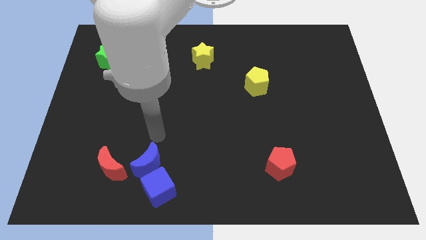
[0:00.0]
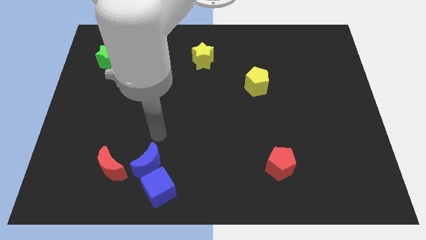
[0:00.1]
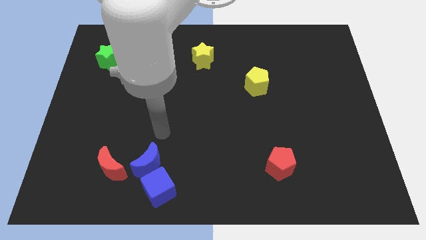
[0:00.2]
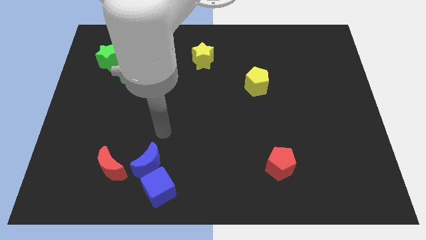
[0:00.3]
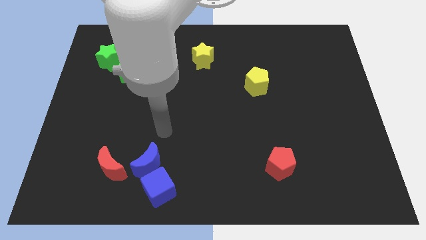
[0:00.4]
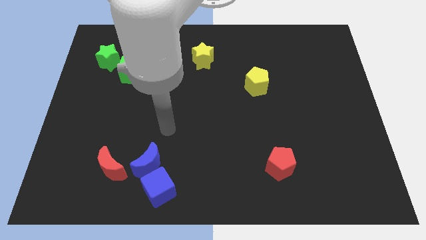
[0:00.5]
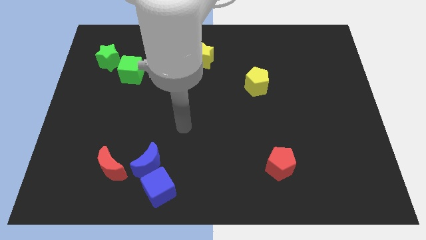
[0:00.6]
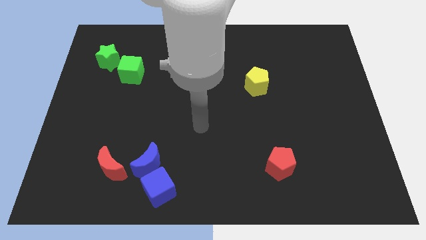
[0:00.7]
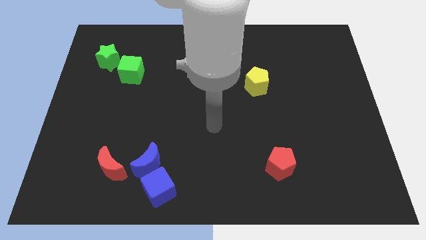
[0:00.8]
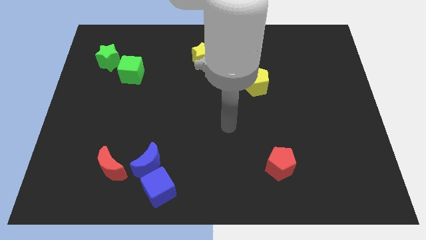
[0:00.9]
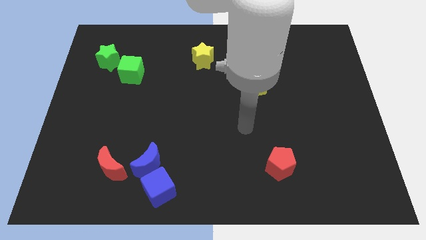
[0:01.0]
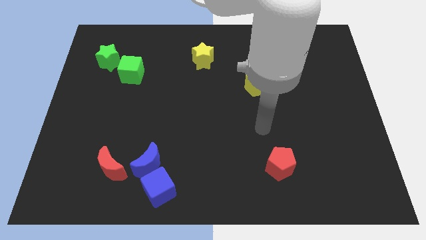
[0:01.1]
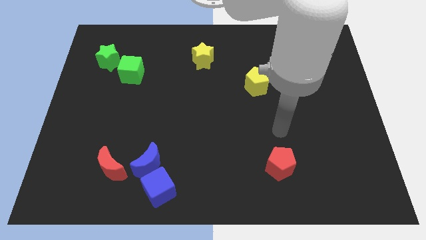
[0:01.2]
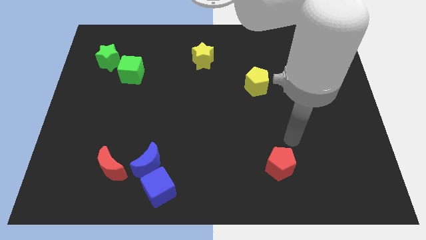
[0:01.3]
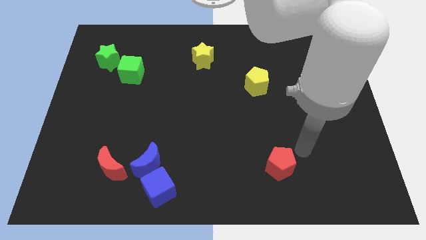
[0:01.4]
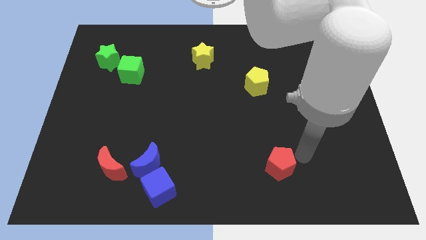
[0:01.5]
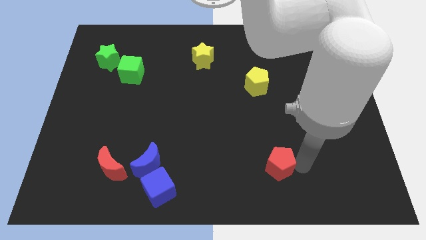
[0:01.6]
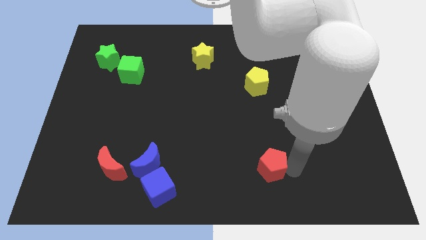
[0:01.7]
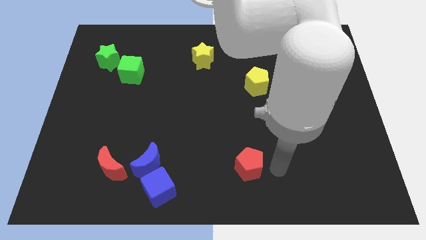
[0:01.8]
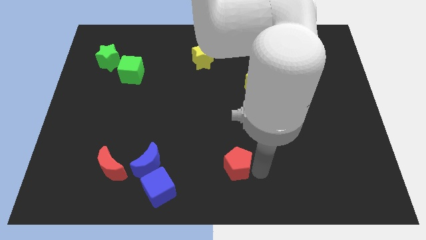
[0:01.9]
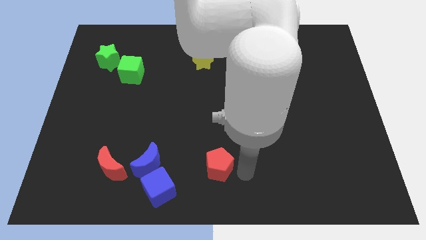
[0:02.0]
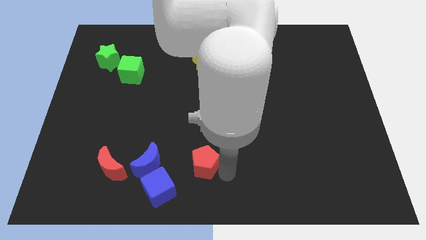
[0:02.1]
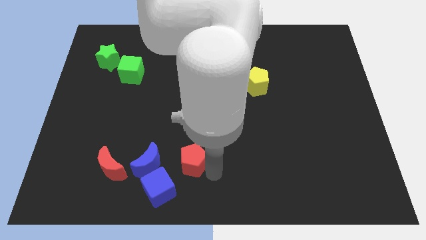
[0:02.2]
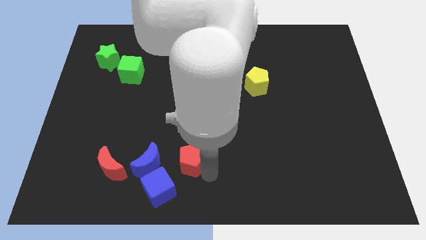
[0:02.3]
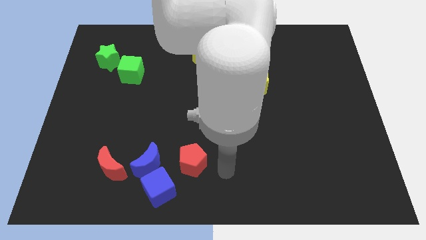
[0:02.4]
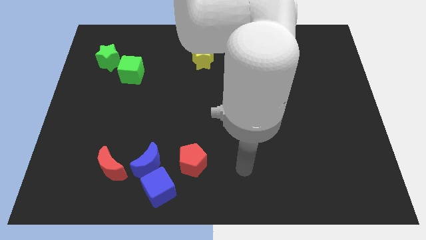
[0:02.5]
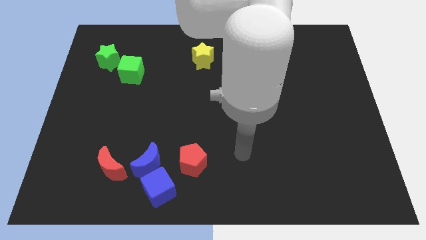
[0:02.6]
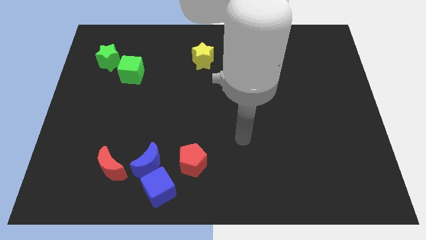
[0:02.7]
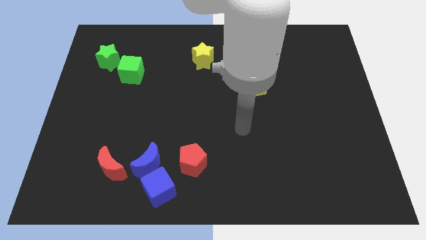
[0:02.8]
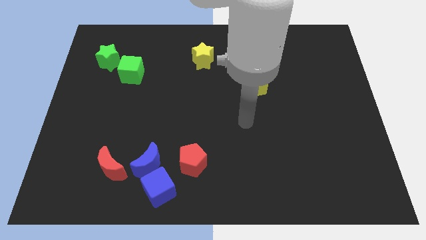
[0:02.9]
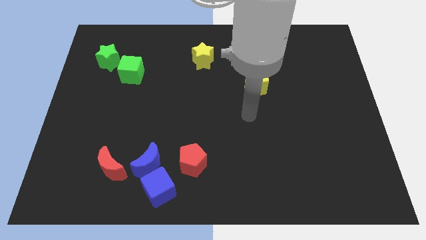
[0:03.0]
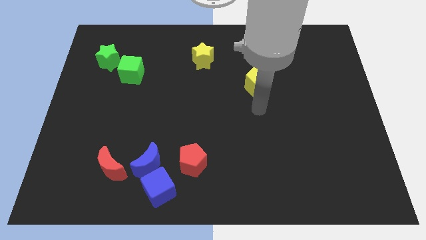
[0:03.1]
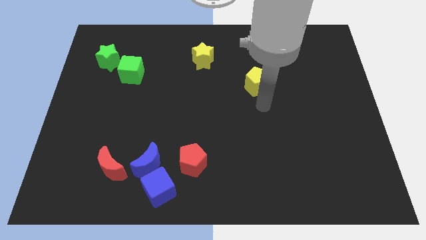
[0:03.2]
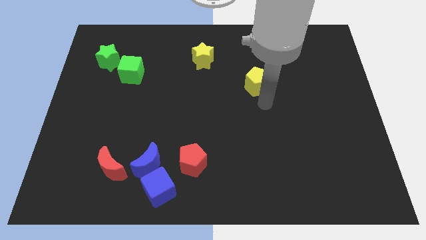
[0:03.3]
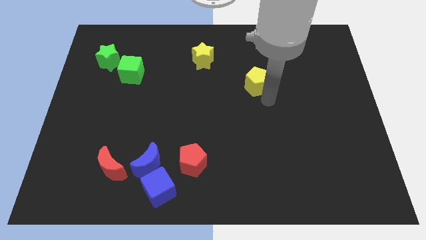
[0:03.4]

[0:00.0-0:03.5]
place the red pentagon to the right of the blue crescent

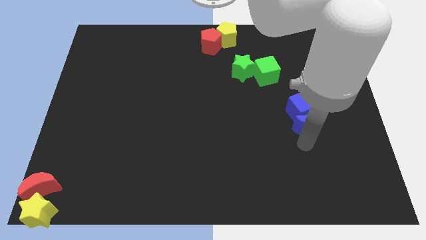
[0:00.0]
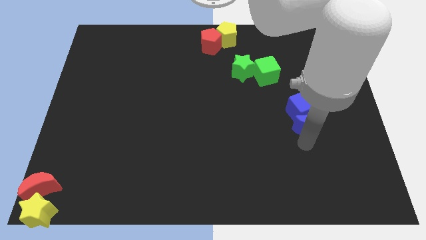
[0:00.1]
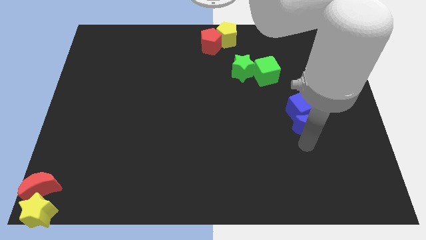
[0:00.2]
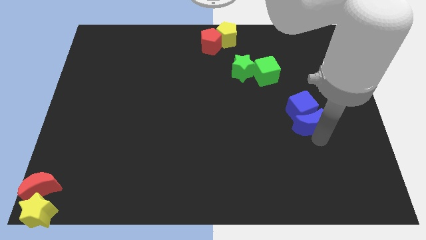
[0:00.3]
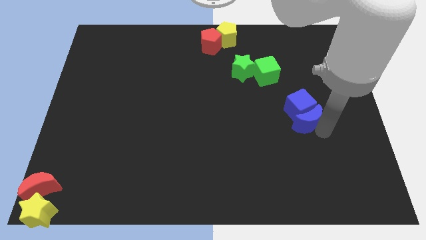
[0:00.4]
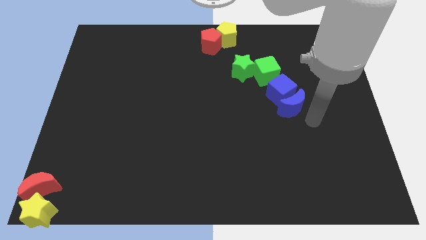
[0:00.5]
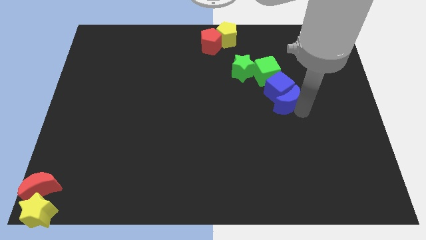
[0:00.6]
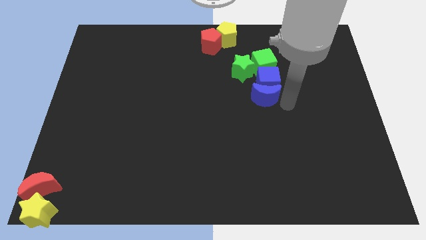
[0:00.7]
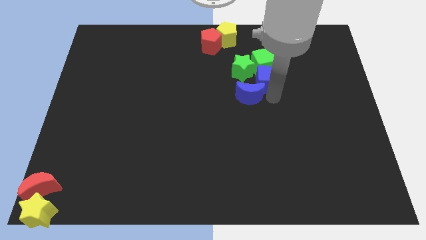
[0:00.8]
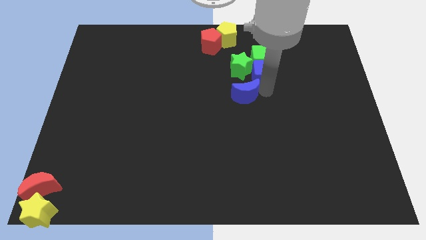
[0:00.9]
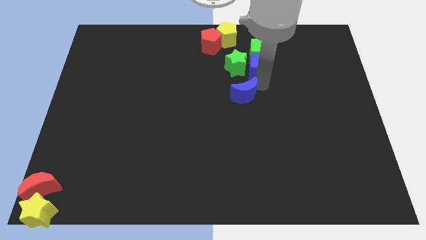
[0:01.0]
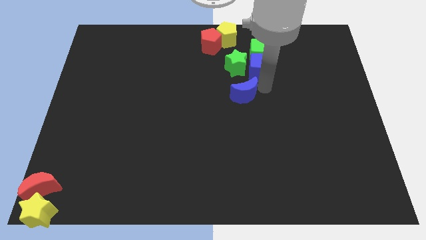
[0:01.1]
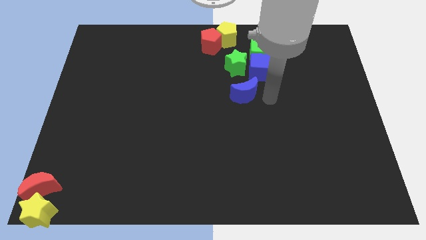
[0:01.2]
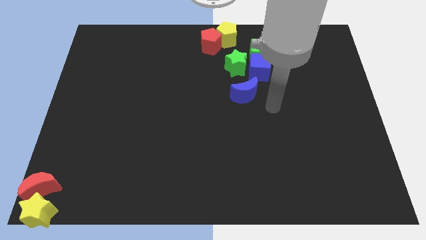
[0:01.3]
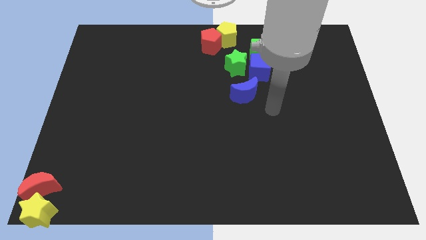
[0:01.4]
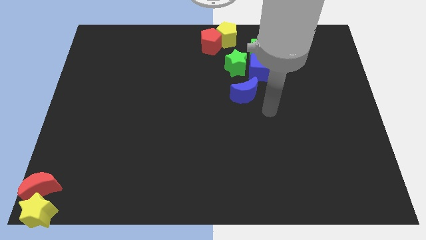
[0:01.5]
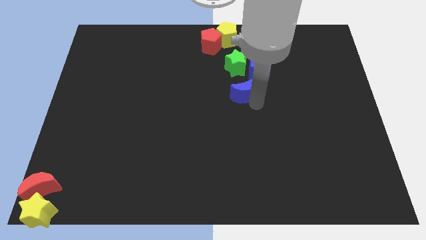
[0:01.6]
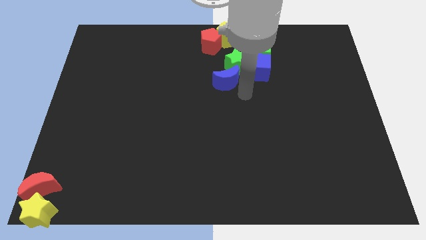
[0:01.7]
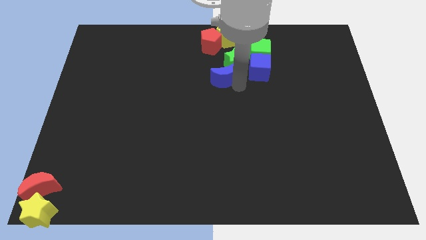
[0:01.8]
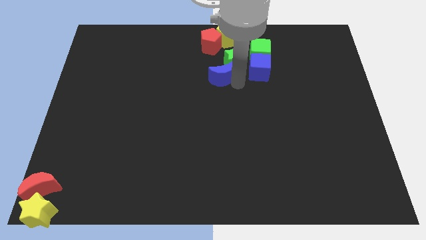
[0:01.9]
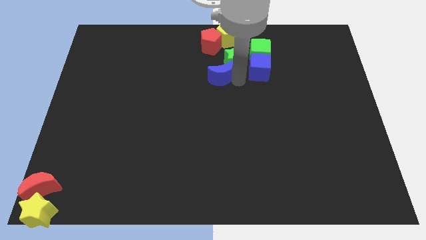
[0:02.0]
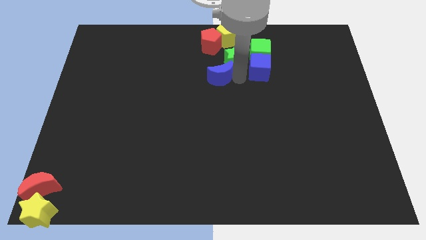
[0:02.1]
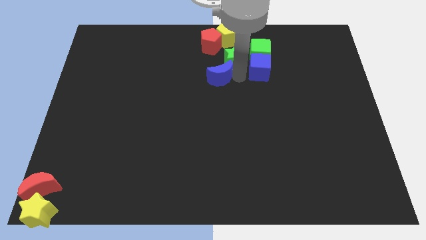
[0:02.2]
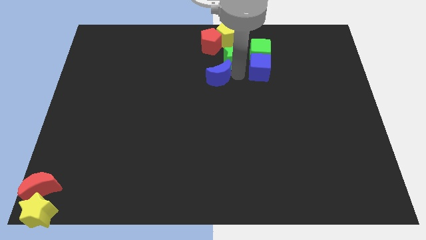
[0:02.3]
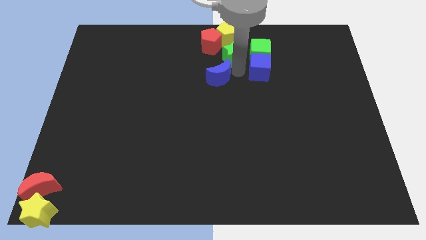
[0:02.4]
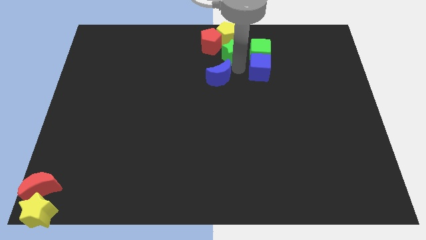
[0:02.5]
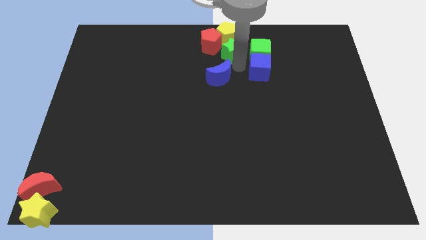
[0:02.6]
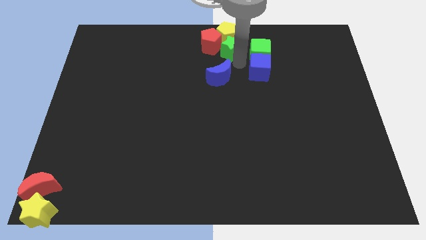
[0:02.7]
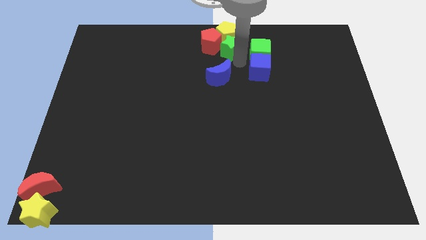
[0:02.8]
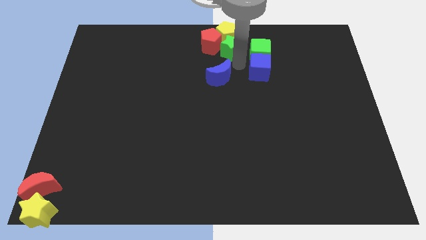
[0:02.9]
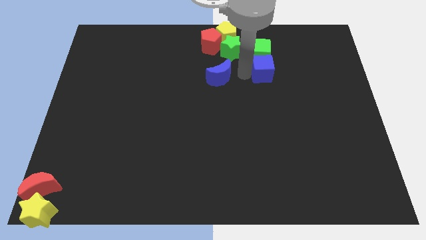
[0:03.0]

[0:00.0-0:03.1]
move the blue crescentblue cube green star towards the top center

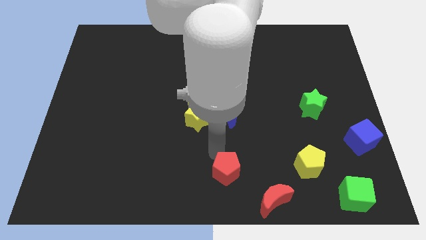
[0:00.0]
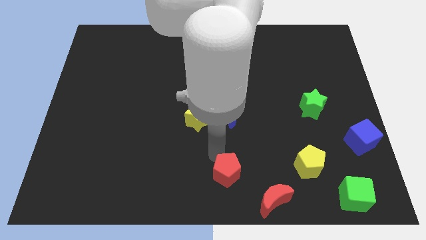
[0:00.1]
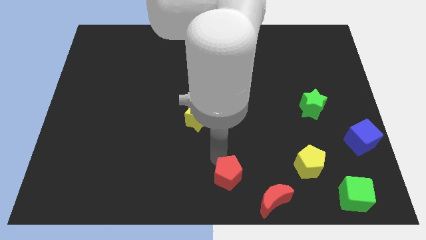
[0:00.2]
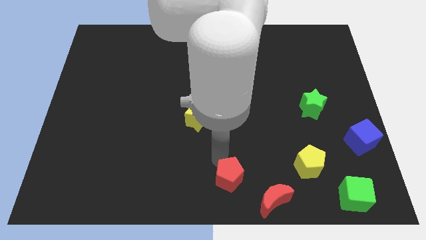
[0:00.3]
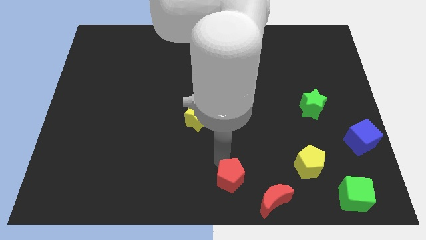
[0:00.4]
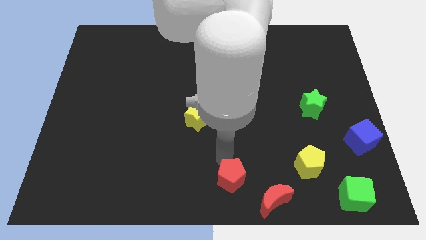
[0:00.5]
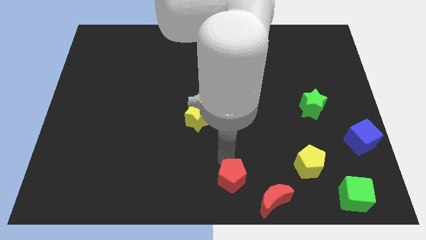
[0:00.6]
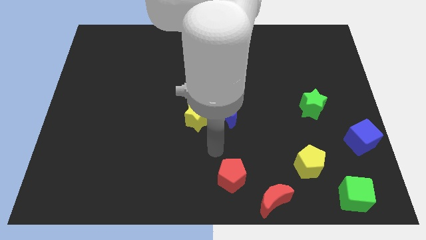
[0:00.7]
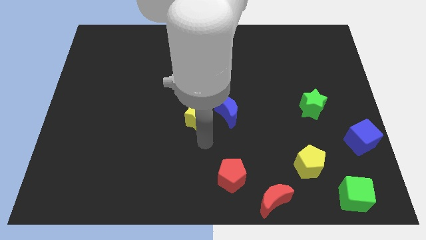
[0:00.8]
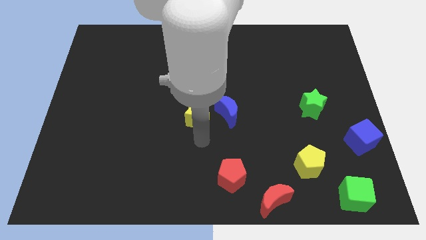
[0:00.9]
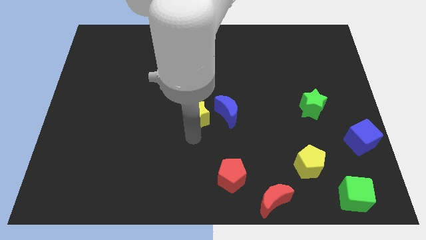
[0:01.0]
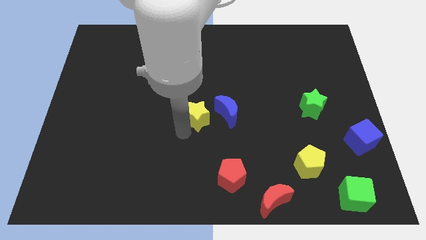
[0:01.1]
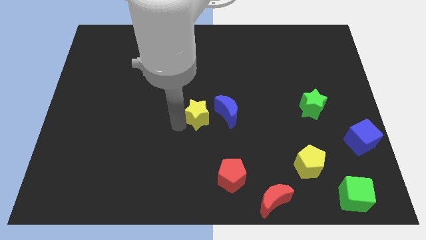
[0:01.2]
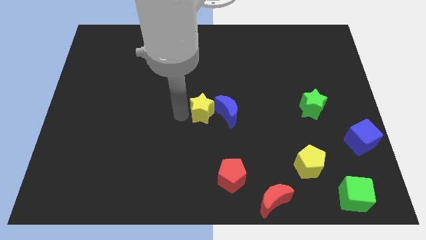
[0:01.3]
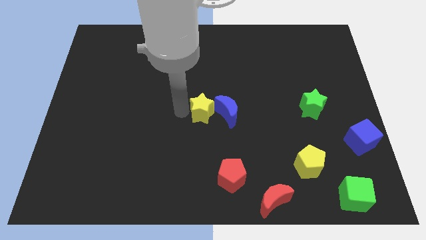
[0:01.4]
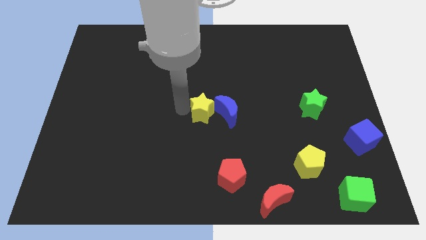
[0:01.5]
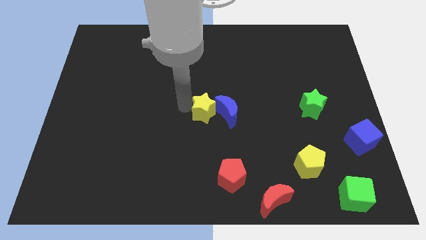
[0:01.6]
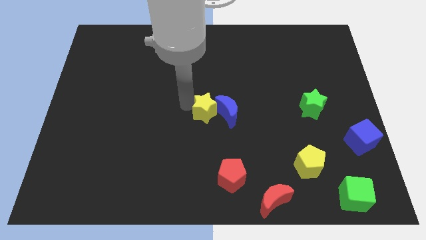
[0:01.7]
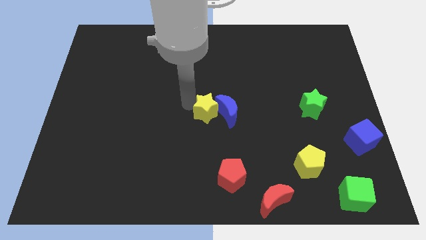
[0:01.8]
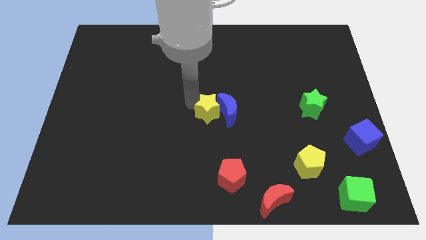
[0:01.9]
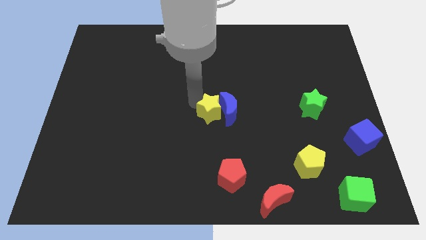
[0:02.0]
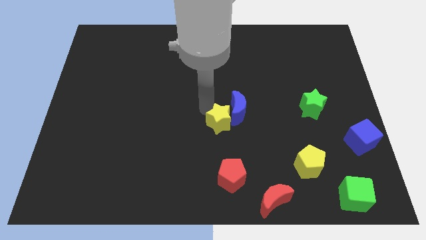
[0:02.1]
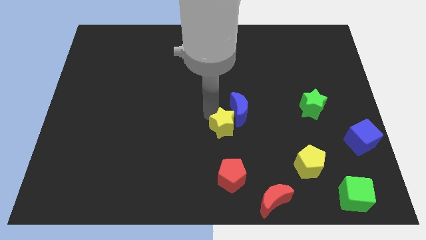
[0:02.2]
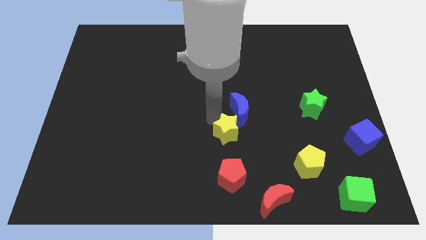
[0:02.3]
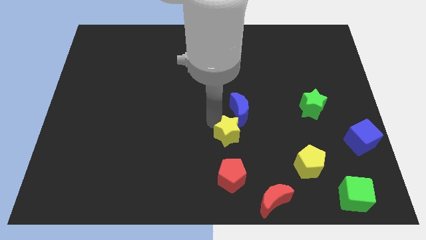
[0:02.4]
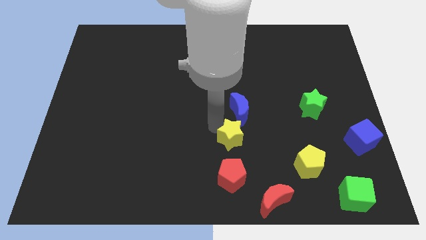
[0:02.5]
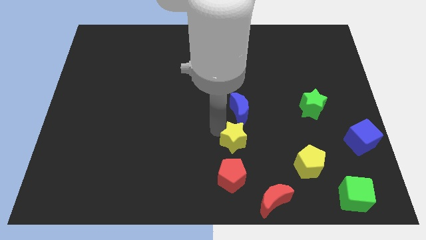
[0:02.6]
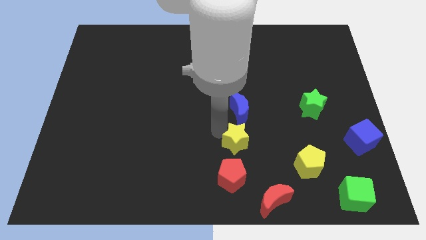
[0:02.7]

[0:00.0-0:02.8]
place the yellow star above the red pentagon
